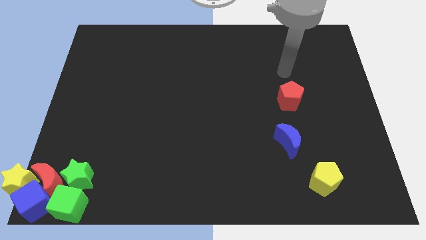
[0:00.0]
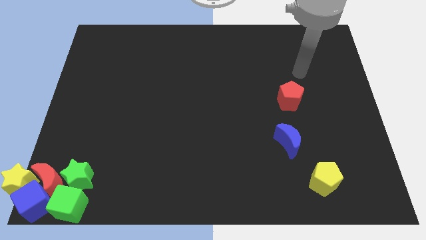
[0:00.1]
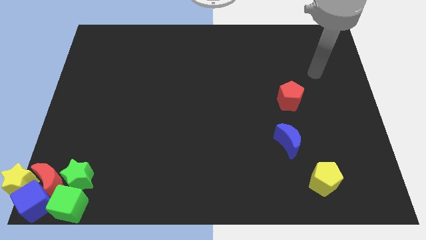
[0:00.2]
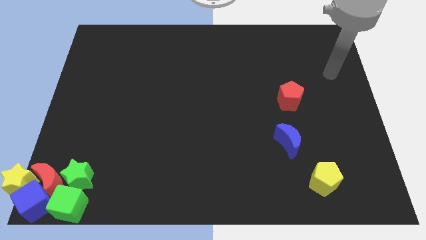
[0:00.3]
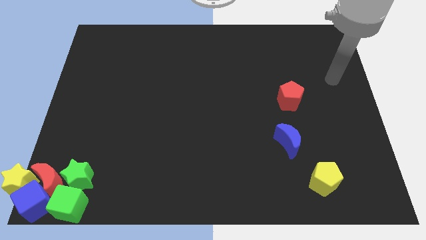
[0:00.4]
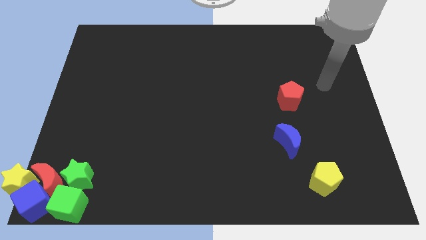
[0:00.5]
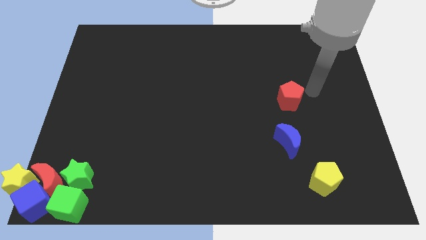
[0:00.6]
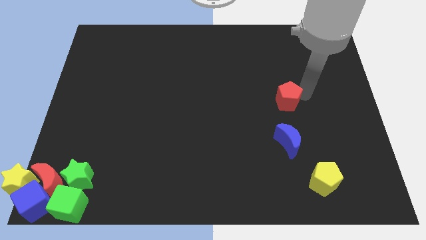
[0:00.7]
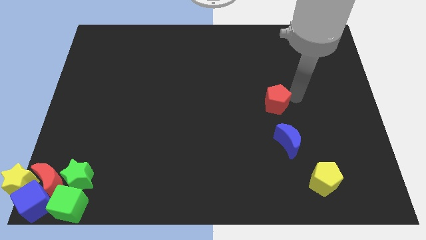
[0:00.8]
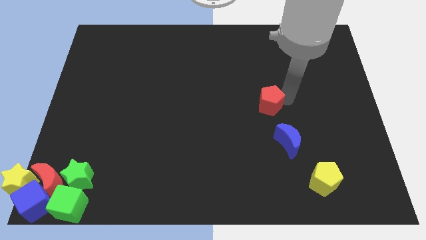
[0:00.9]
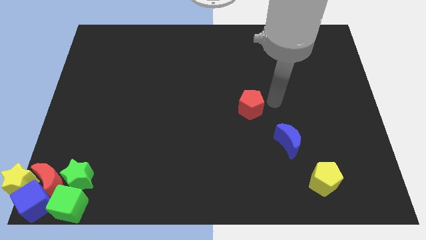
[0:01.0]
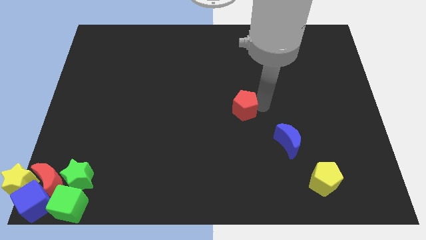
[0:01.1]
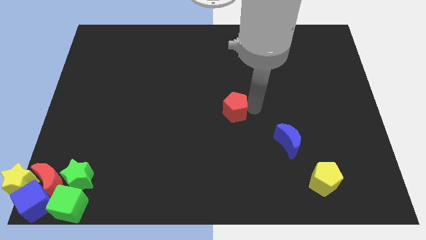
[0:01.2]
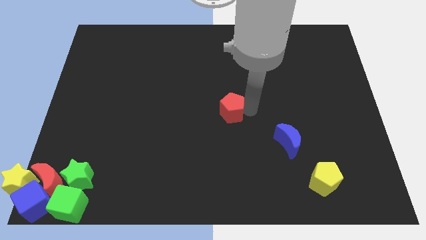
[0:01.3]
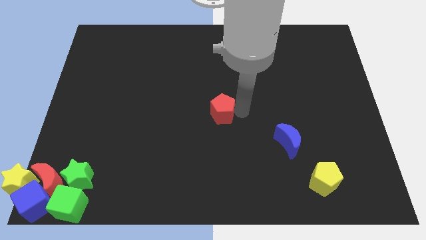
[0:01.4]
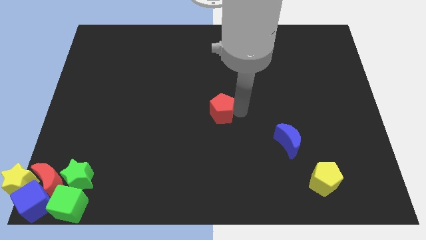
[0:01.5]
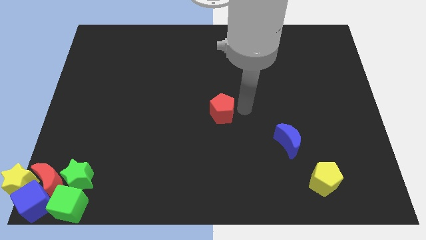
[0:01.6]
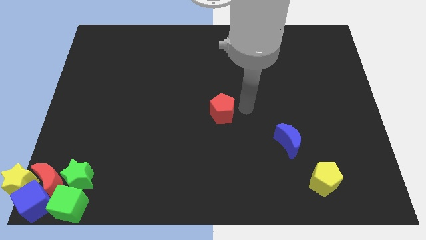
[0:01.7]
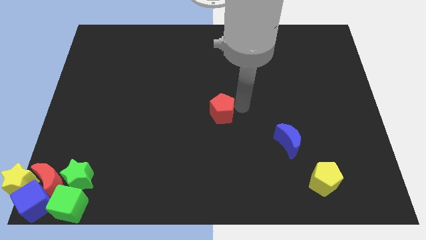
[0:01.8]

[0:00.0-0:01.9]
place the red pentagon to the center of the board

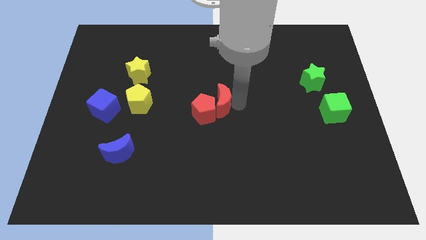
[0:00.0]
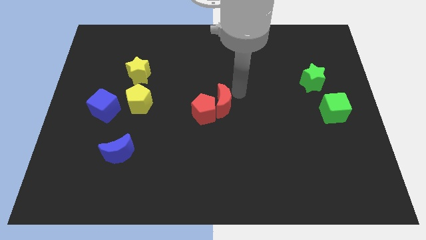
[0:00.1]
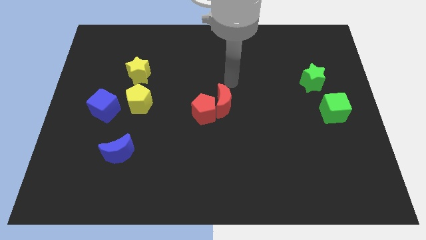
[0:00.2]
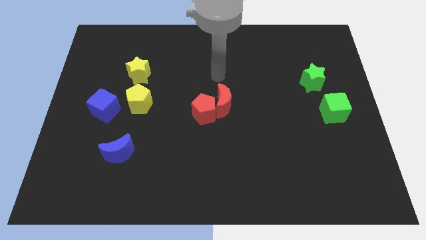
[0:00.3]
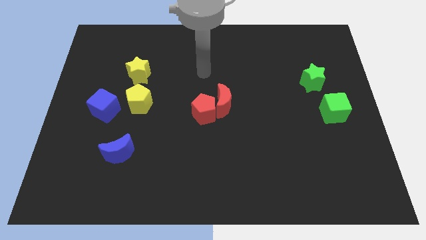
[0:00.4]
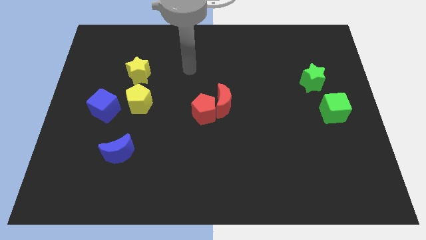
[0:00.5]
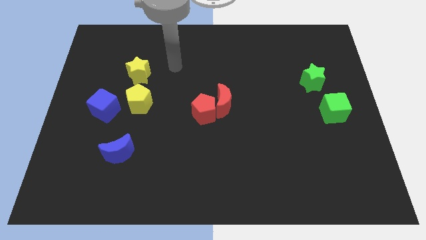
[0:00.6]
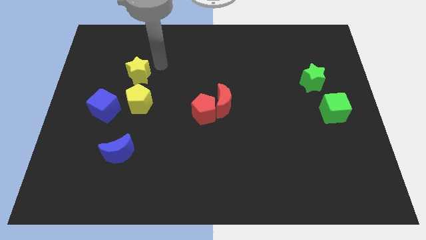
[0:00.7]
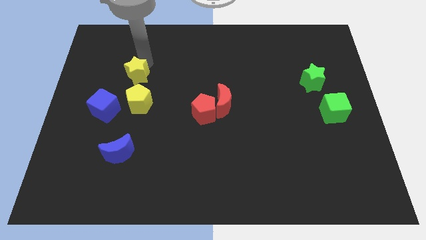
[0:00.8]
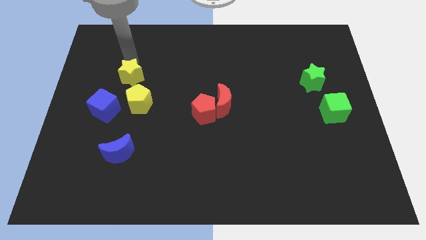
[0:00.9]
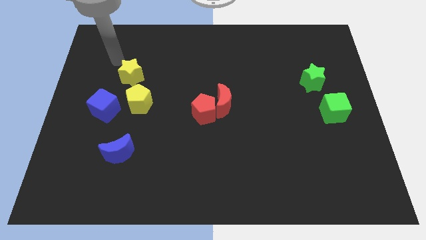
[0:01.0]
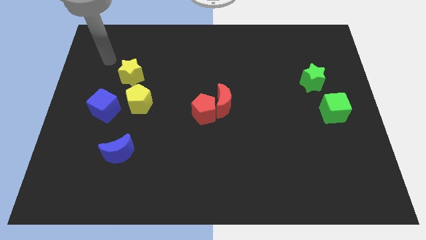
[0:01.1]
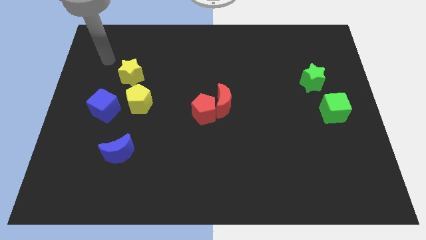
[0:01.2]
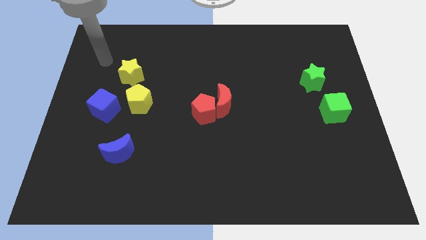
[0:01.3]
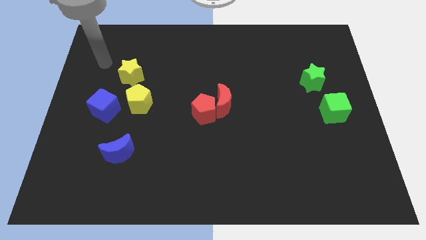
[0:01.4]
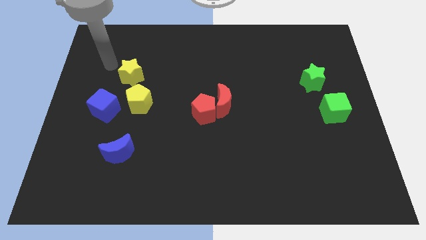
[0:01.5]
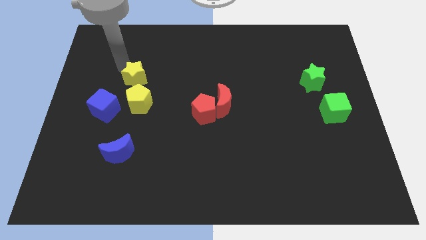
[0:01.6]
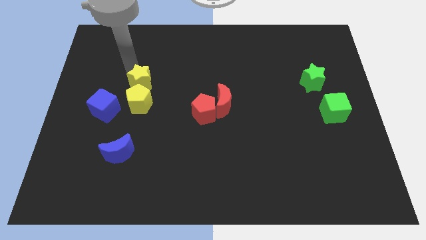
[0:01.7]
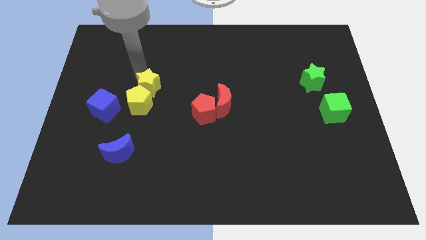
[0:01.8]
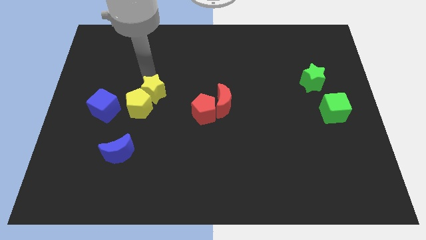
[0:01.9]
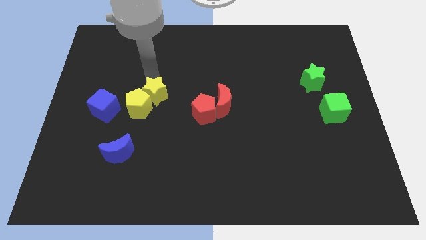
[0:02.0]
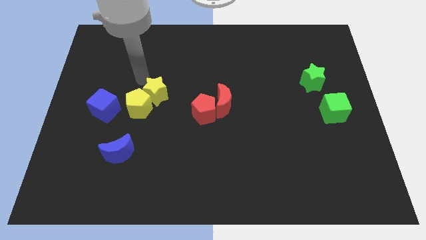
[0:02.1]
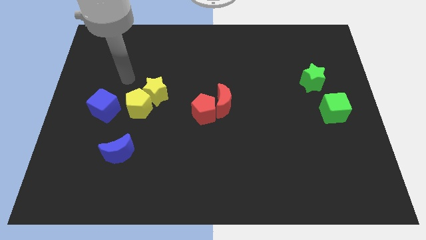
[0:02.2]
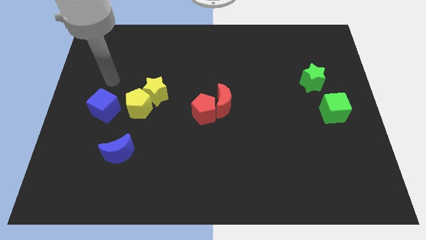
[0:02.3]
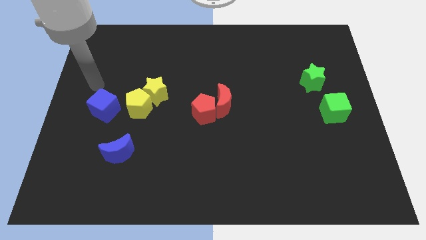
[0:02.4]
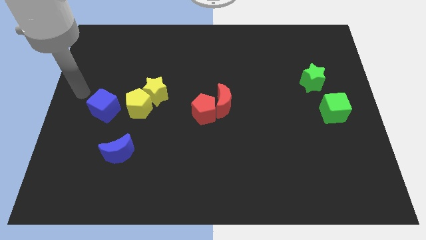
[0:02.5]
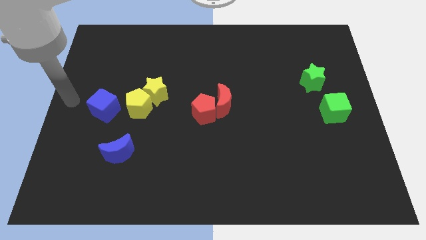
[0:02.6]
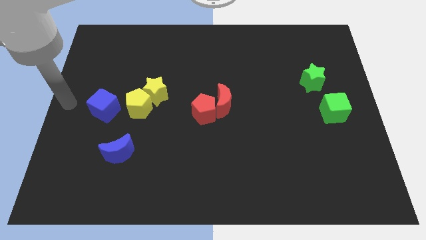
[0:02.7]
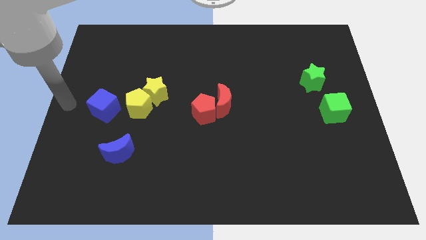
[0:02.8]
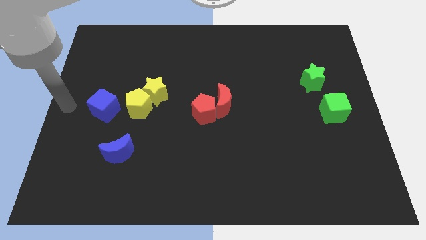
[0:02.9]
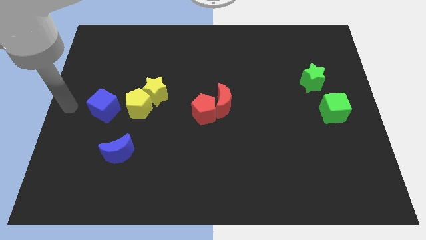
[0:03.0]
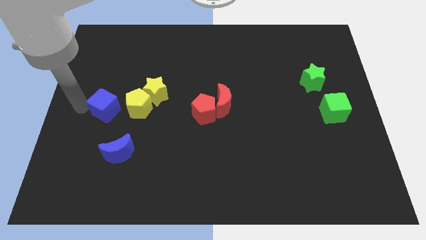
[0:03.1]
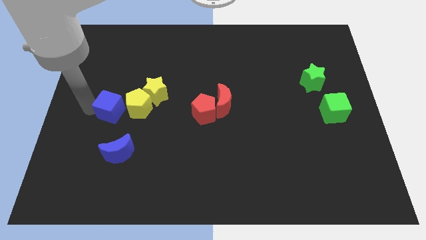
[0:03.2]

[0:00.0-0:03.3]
push the yellow star into yellow pentagon

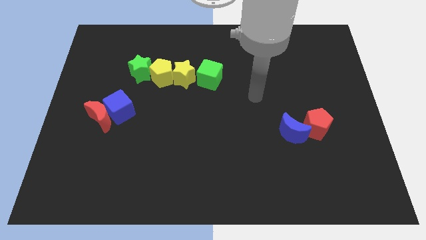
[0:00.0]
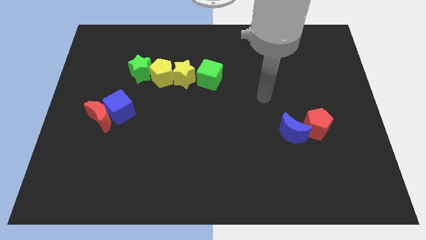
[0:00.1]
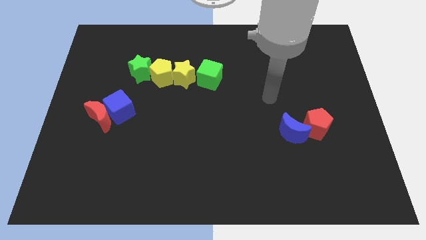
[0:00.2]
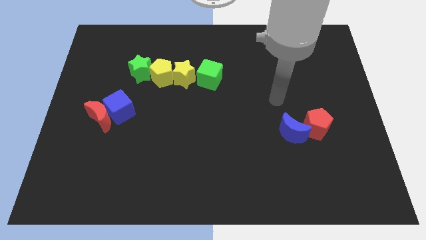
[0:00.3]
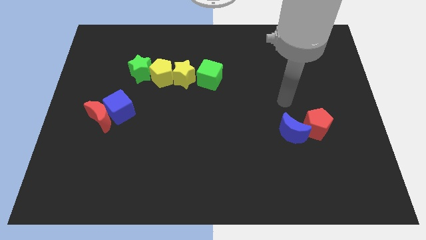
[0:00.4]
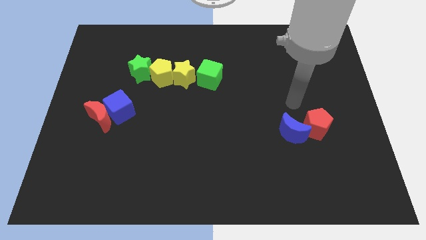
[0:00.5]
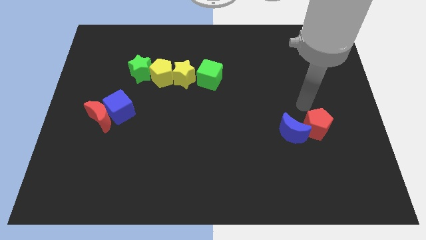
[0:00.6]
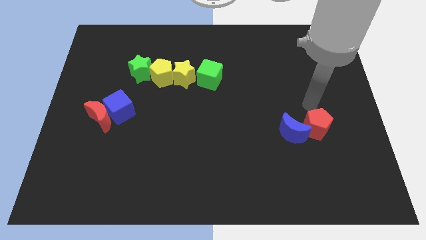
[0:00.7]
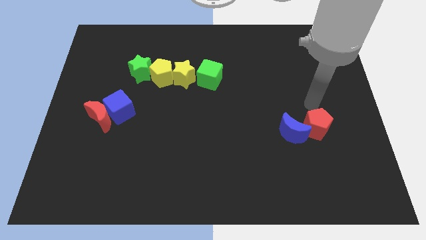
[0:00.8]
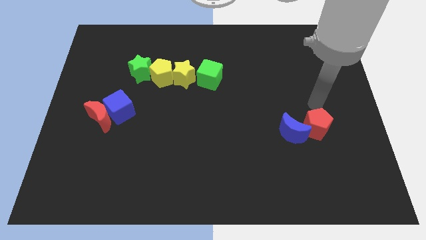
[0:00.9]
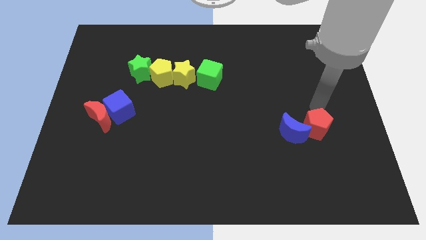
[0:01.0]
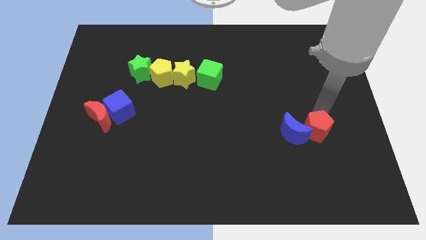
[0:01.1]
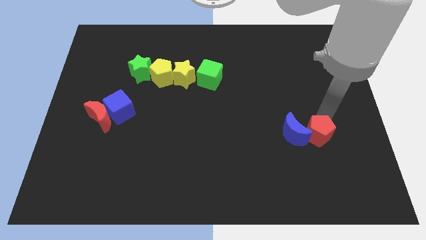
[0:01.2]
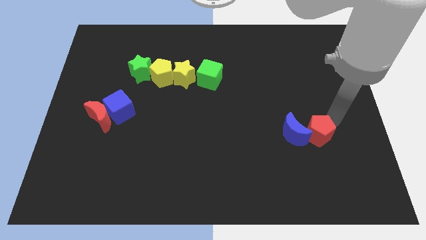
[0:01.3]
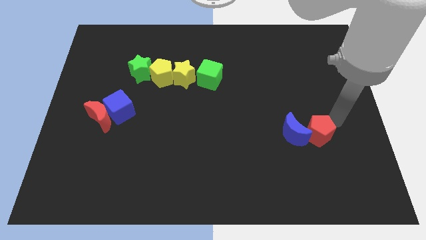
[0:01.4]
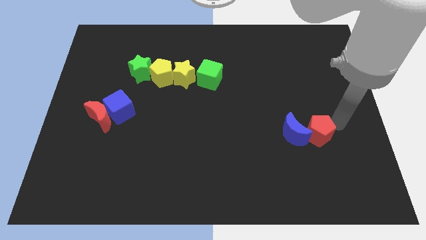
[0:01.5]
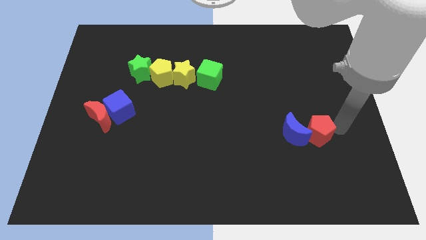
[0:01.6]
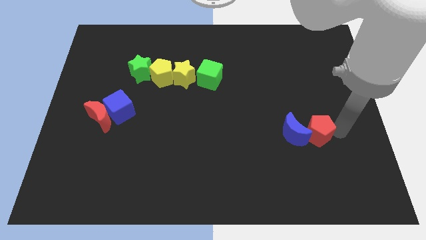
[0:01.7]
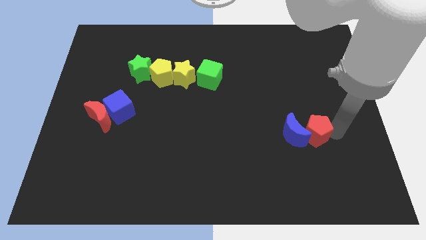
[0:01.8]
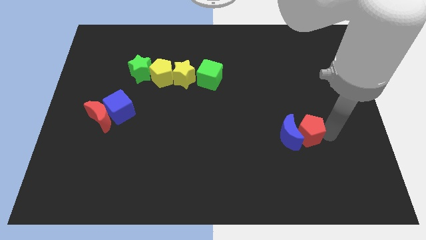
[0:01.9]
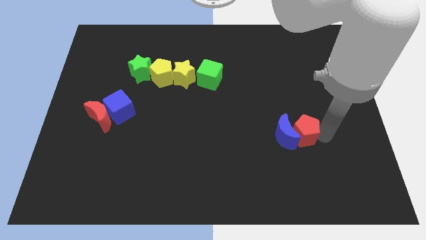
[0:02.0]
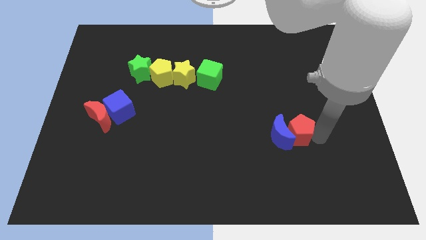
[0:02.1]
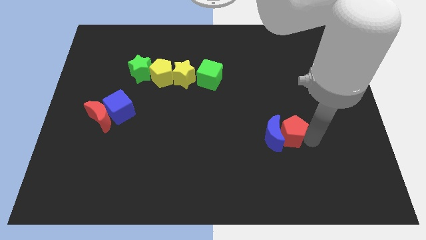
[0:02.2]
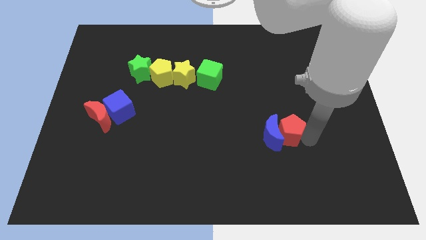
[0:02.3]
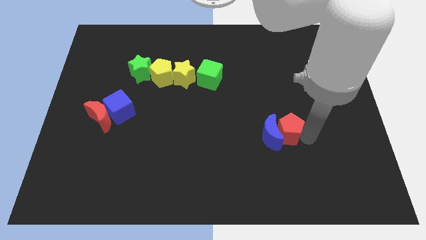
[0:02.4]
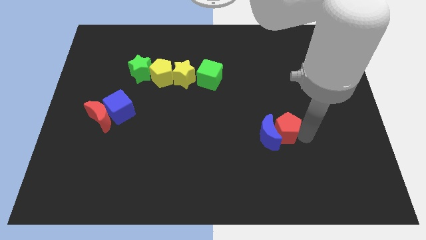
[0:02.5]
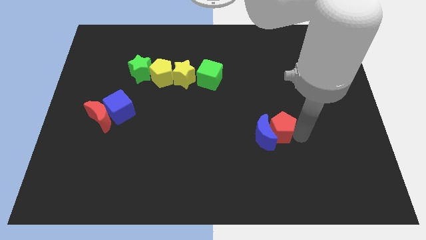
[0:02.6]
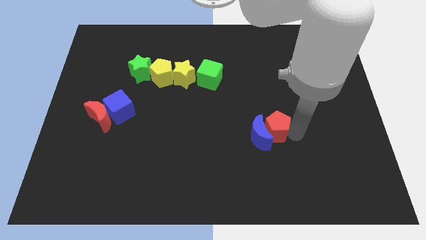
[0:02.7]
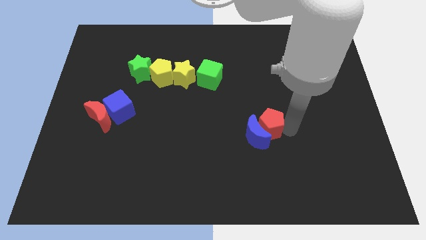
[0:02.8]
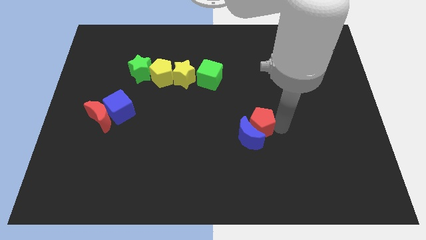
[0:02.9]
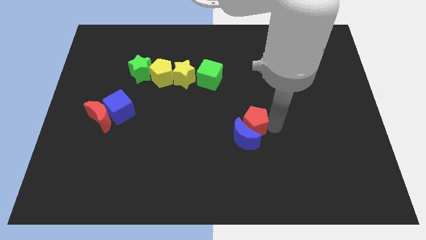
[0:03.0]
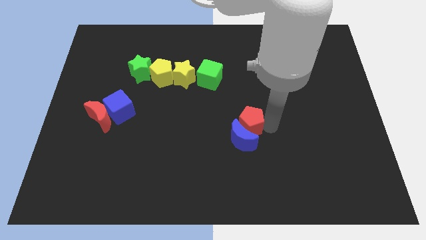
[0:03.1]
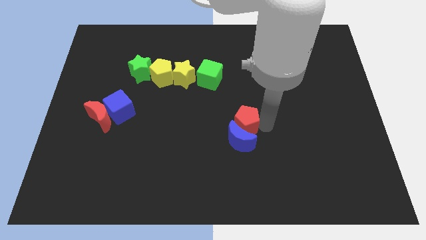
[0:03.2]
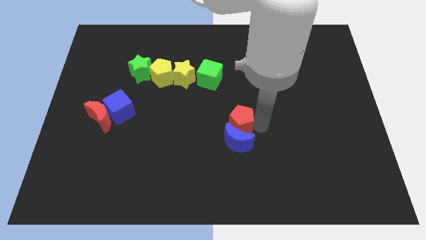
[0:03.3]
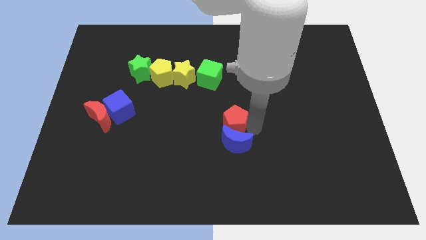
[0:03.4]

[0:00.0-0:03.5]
move the red pentagon to the top side of the blue moon

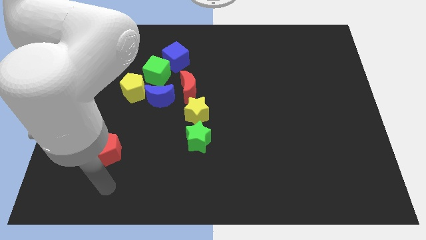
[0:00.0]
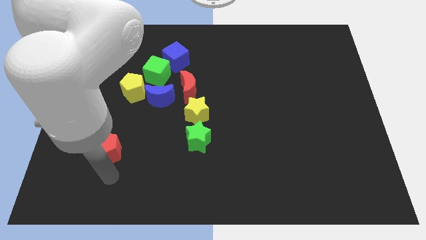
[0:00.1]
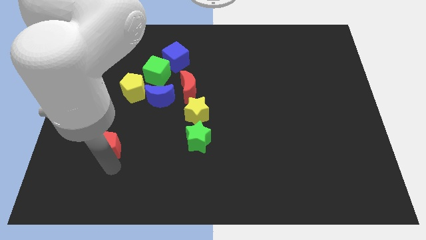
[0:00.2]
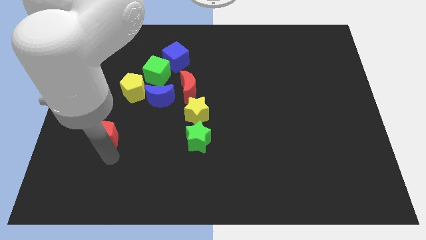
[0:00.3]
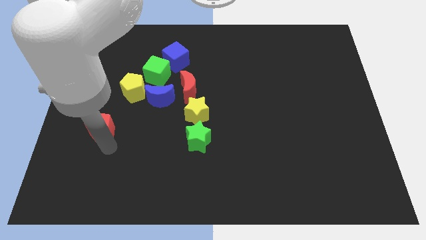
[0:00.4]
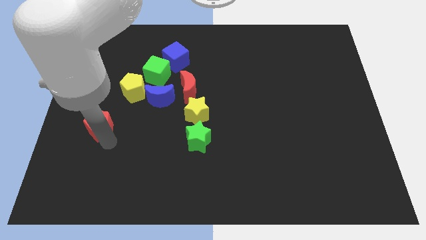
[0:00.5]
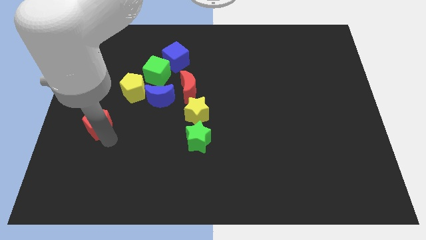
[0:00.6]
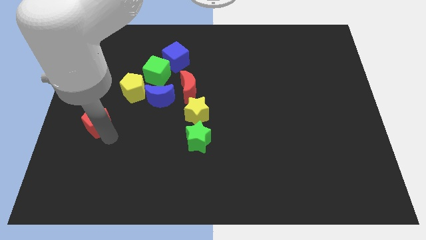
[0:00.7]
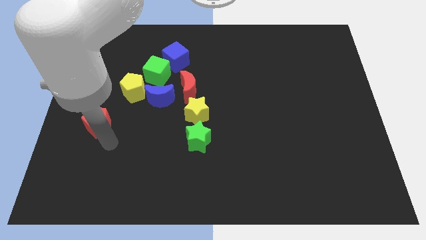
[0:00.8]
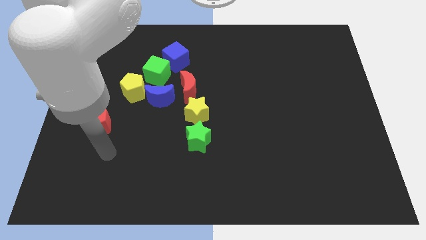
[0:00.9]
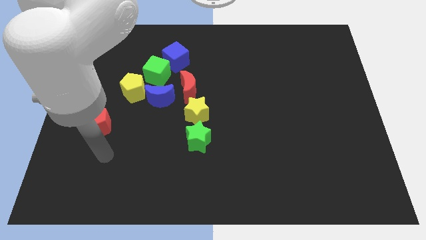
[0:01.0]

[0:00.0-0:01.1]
move the red pentagon to the left center
